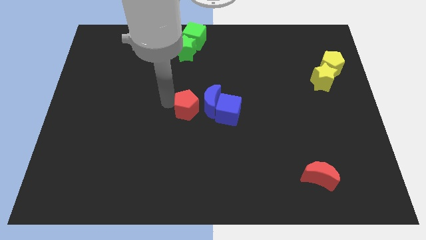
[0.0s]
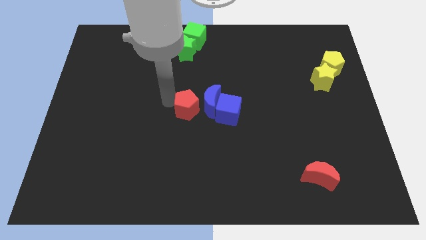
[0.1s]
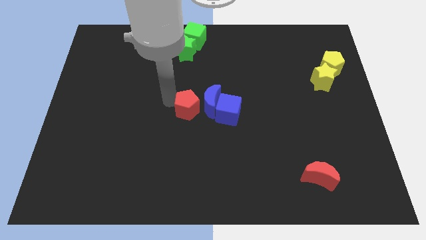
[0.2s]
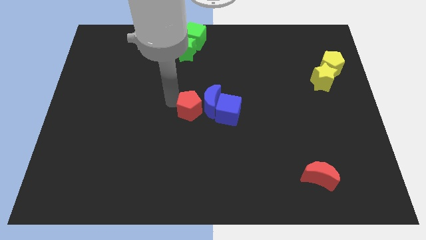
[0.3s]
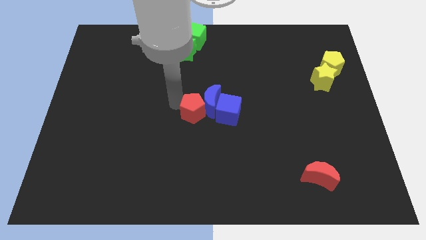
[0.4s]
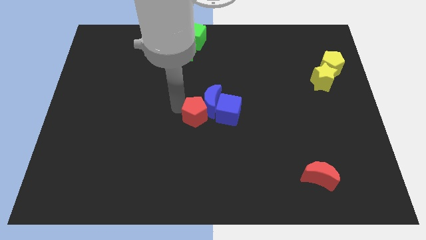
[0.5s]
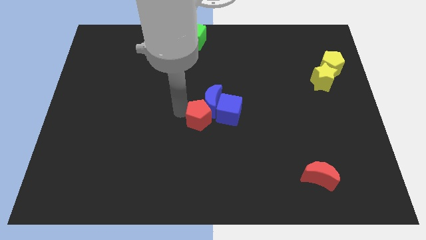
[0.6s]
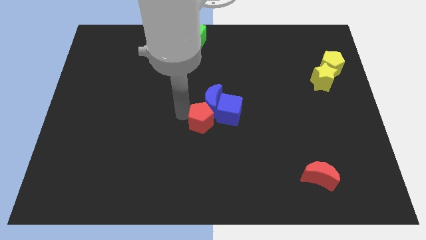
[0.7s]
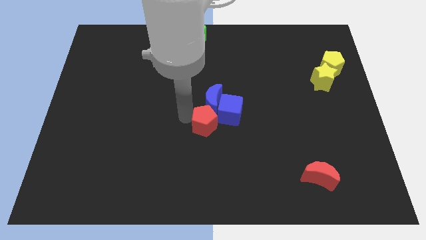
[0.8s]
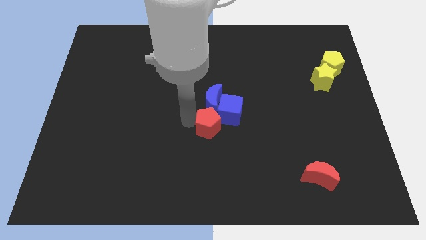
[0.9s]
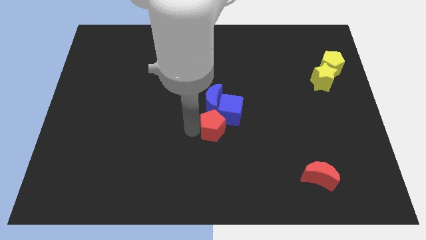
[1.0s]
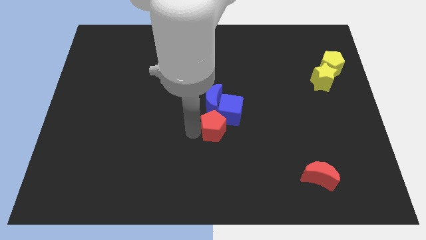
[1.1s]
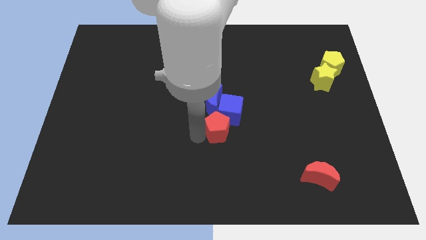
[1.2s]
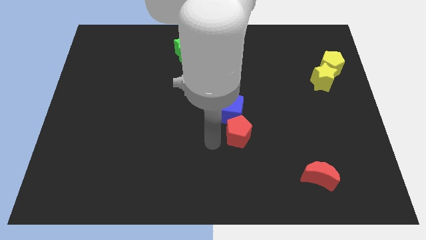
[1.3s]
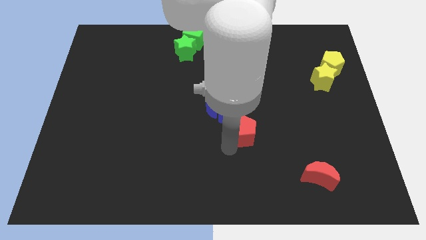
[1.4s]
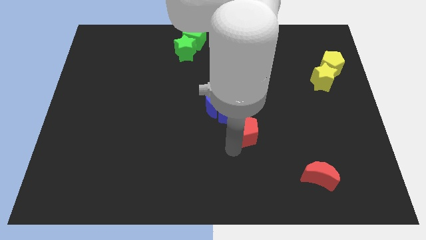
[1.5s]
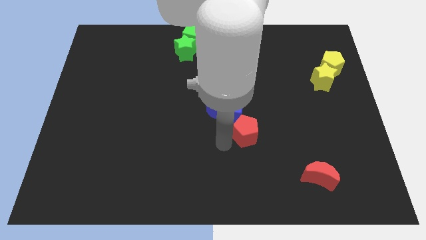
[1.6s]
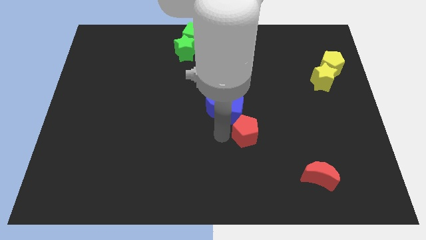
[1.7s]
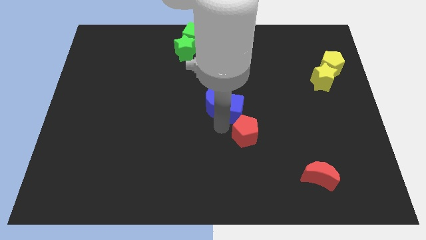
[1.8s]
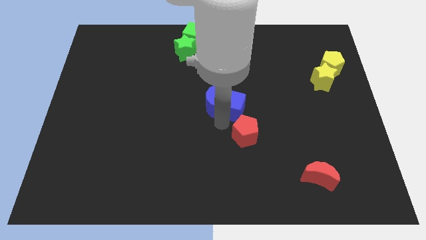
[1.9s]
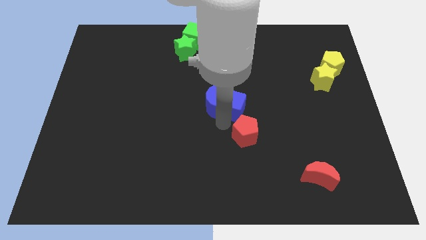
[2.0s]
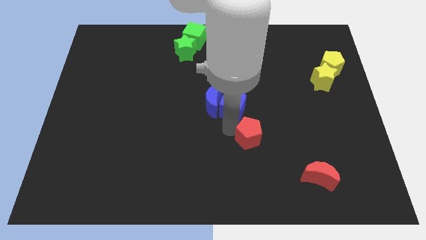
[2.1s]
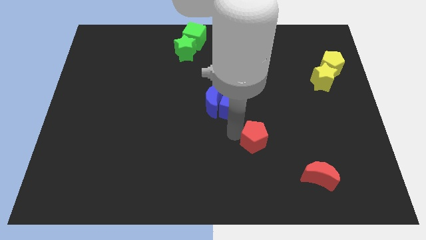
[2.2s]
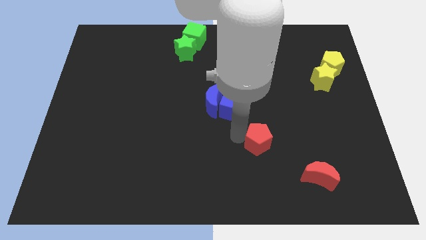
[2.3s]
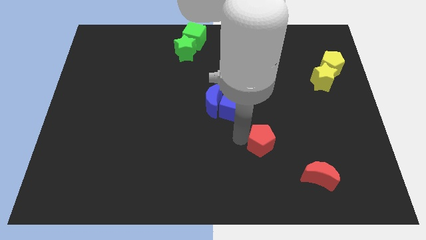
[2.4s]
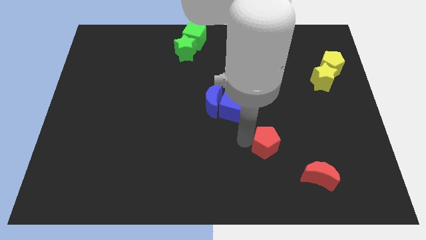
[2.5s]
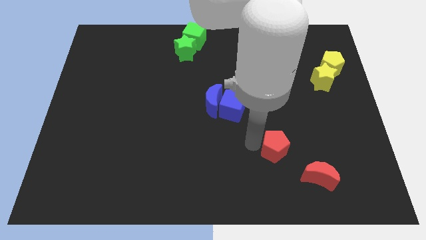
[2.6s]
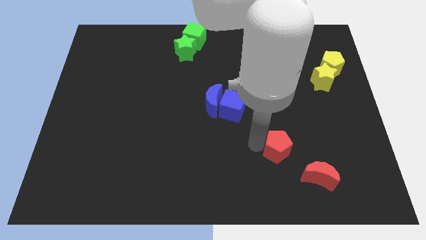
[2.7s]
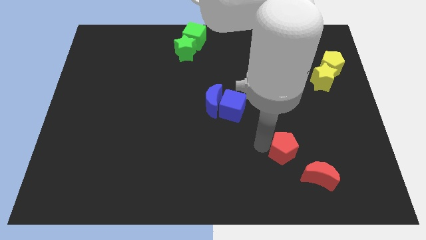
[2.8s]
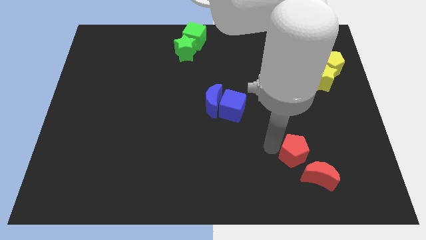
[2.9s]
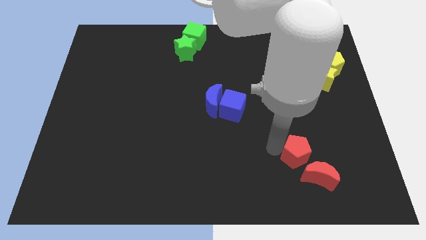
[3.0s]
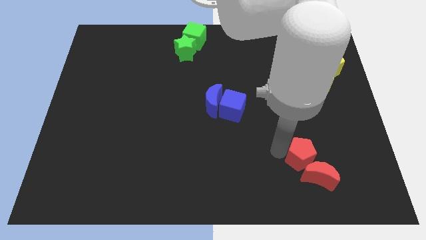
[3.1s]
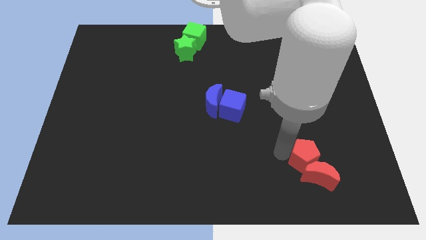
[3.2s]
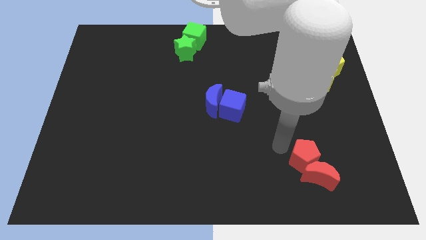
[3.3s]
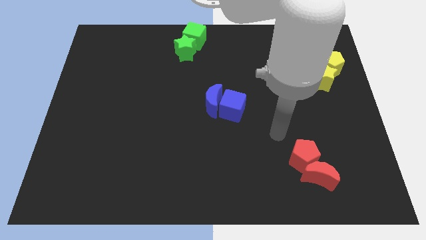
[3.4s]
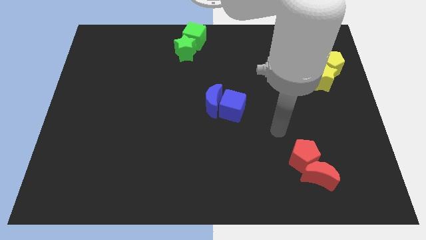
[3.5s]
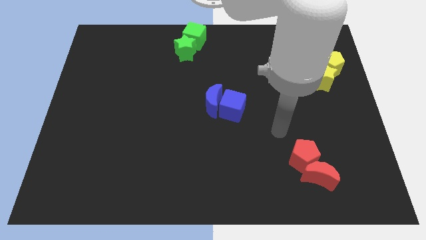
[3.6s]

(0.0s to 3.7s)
push the red pentagon to the top of the red crescent

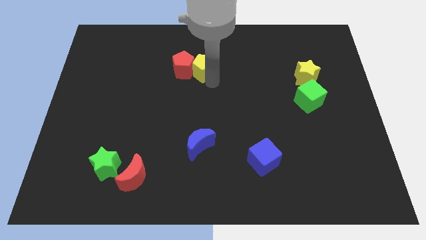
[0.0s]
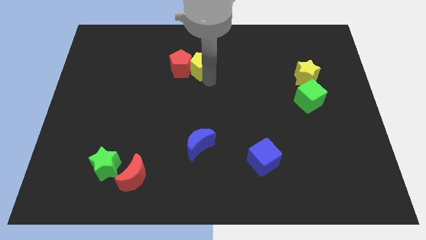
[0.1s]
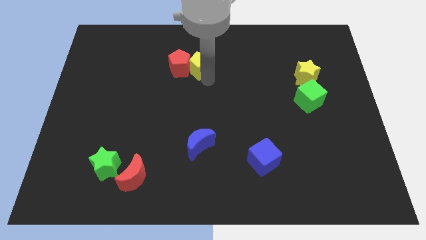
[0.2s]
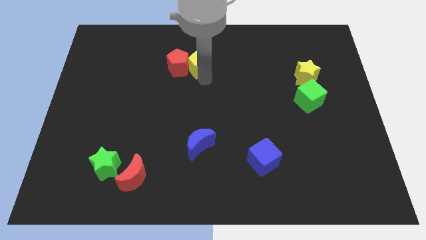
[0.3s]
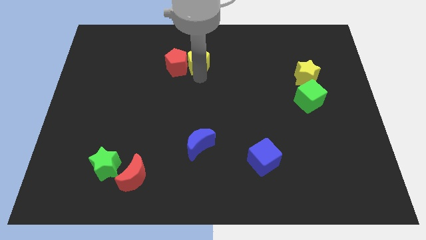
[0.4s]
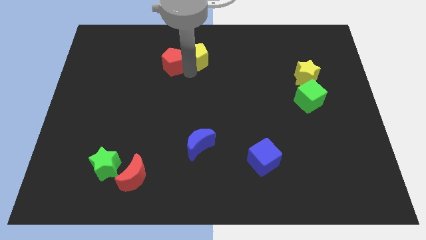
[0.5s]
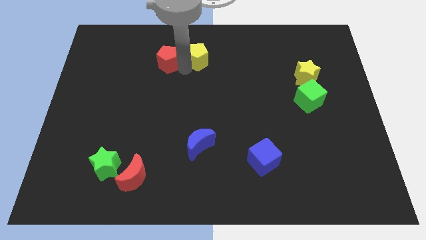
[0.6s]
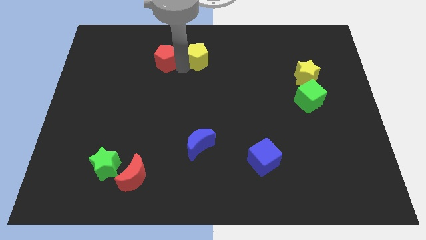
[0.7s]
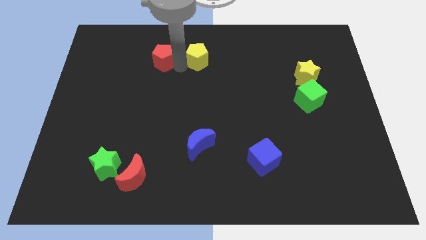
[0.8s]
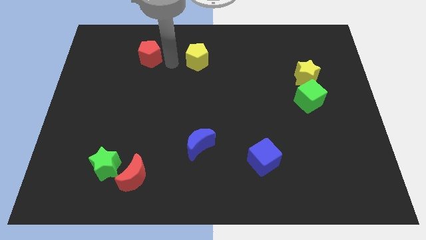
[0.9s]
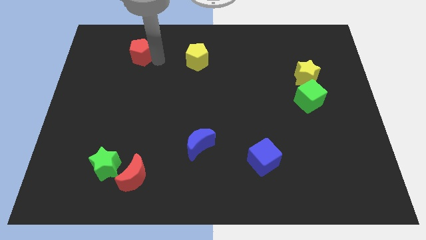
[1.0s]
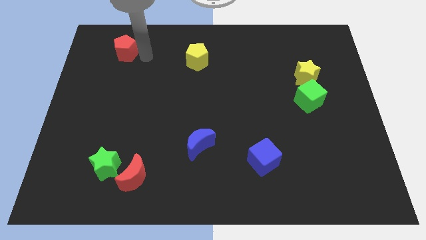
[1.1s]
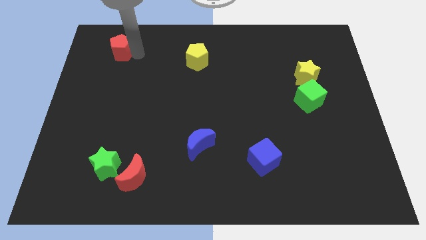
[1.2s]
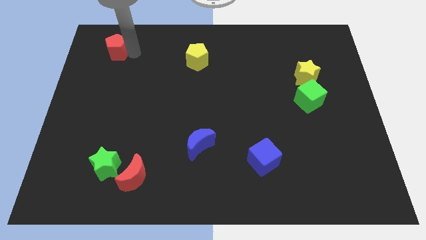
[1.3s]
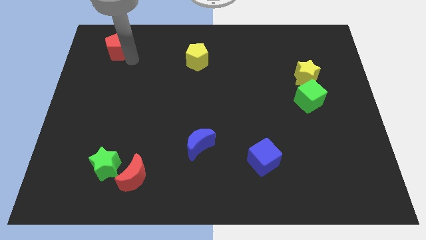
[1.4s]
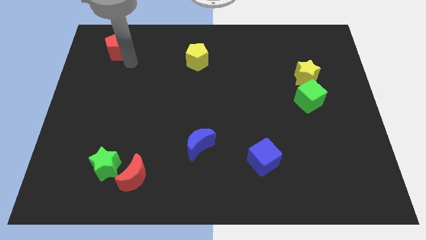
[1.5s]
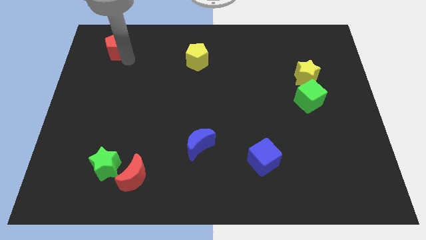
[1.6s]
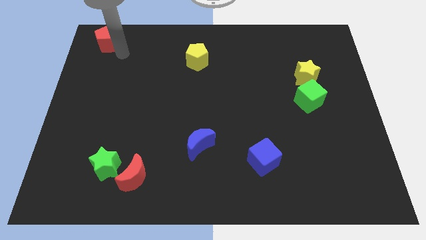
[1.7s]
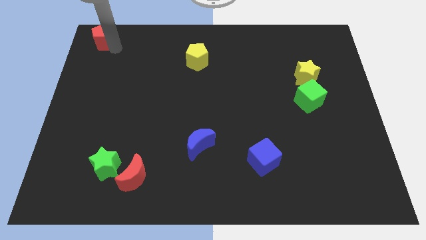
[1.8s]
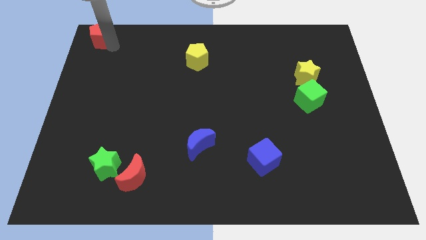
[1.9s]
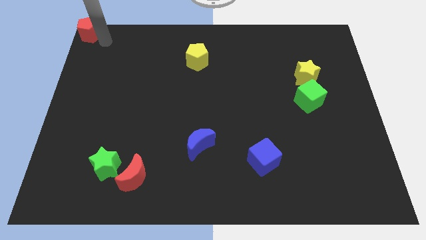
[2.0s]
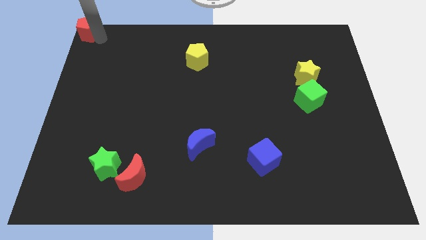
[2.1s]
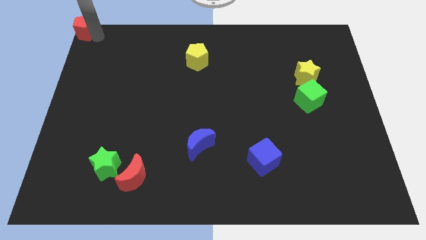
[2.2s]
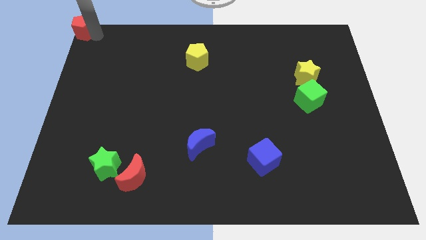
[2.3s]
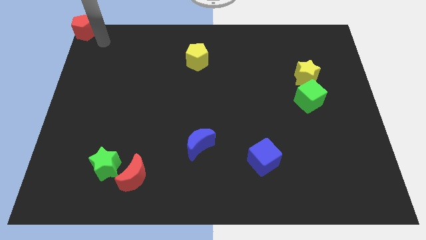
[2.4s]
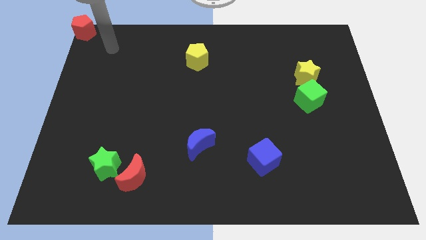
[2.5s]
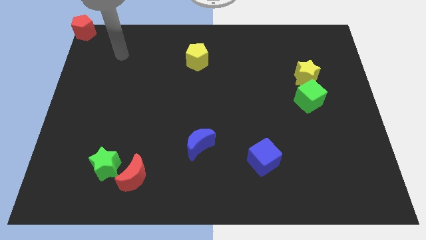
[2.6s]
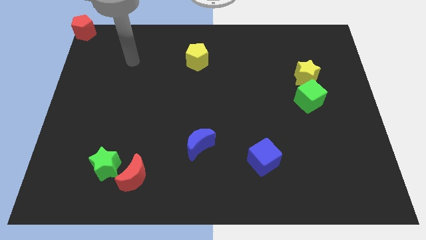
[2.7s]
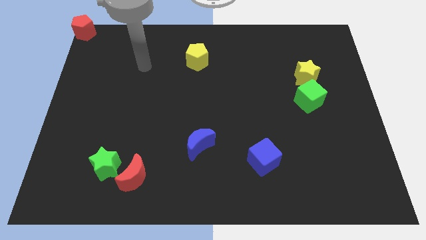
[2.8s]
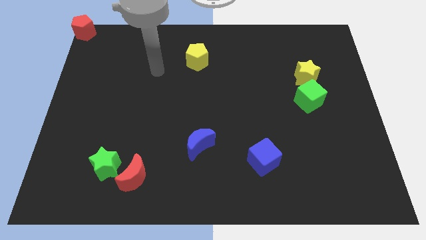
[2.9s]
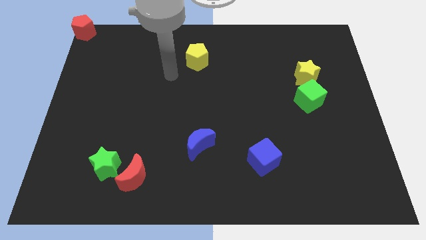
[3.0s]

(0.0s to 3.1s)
push the red pentagon away from the yellow pentagon

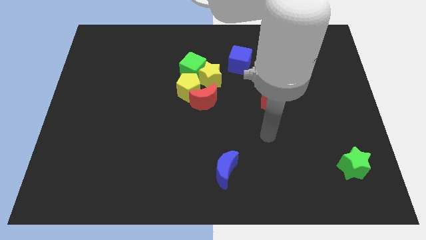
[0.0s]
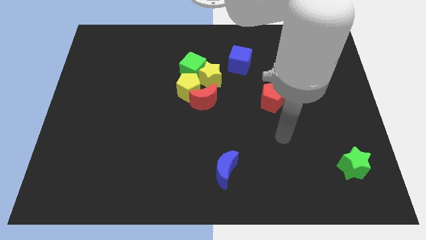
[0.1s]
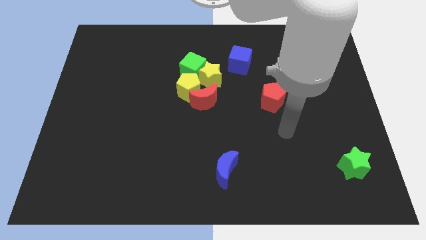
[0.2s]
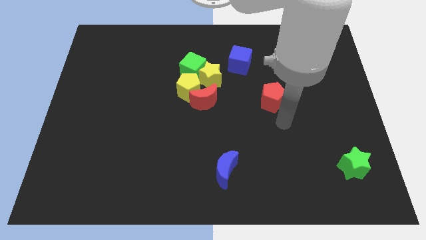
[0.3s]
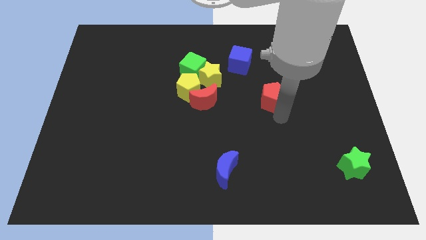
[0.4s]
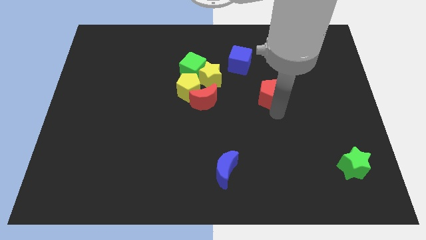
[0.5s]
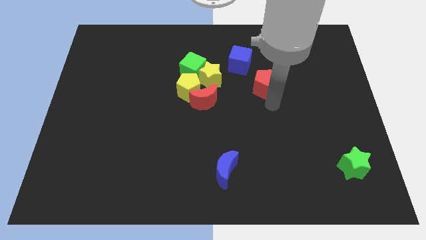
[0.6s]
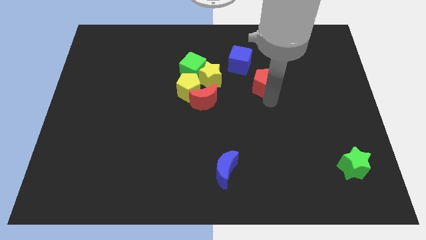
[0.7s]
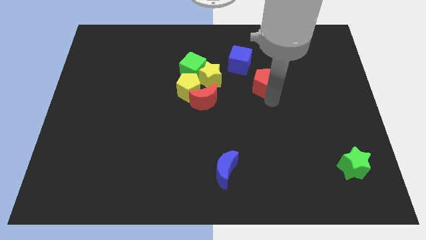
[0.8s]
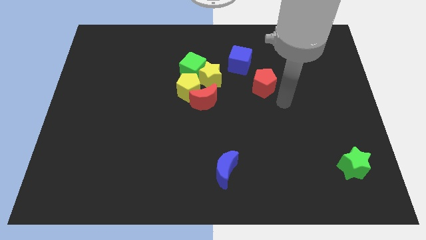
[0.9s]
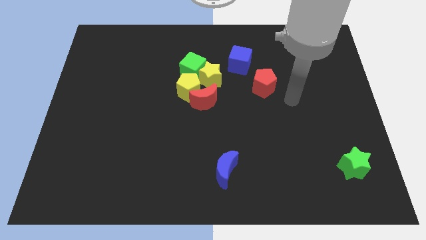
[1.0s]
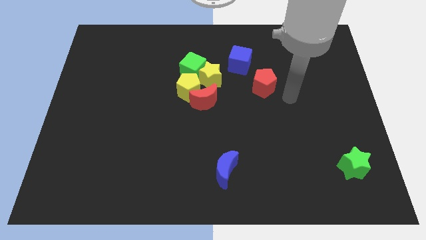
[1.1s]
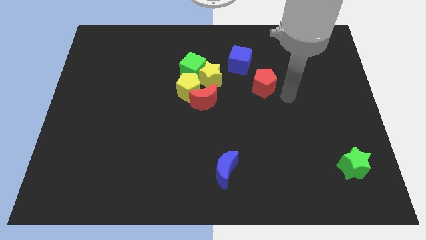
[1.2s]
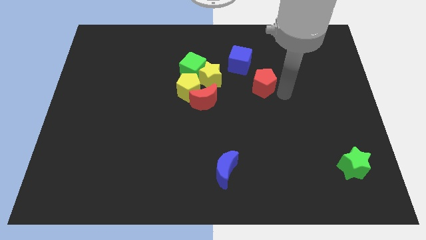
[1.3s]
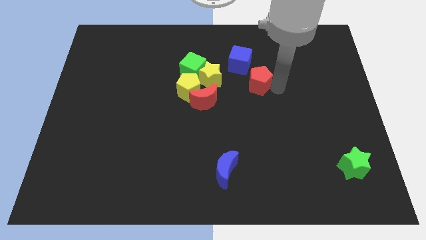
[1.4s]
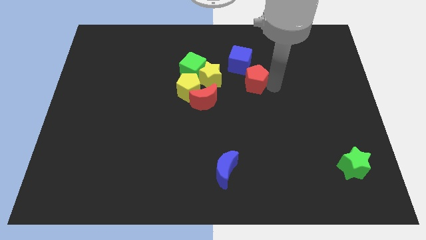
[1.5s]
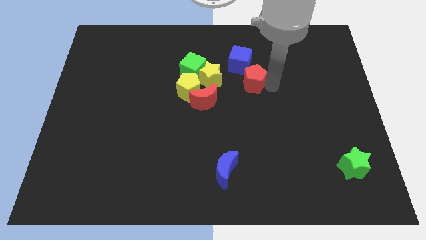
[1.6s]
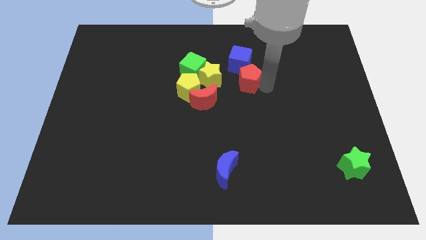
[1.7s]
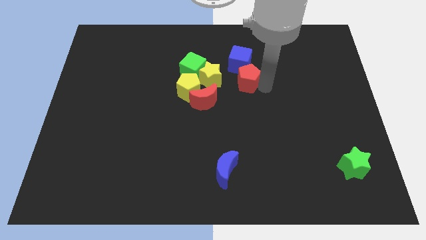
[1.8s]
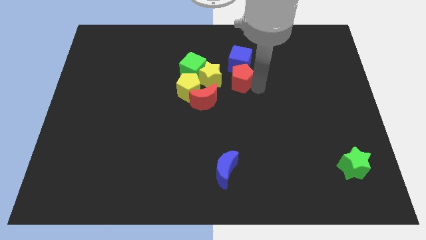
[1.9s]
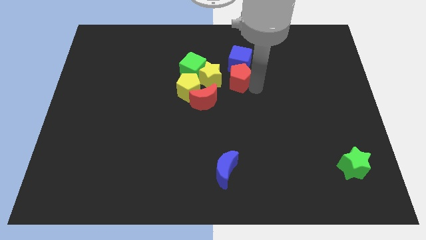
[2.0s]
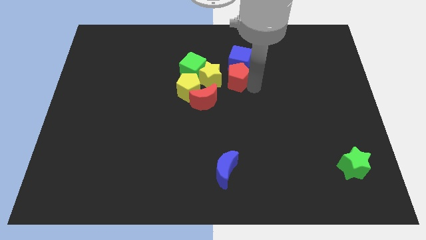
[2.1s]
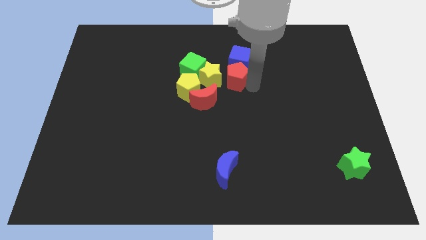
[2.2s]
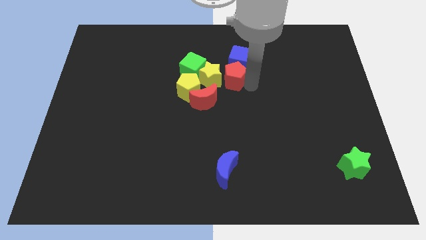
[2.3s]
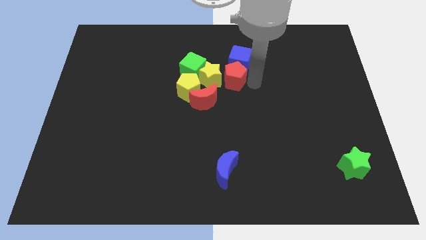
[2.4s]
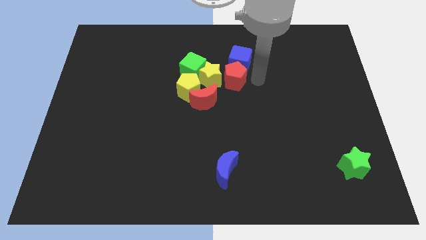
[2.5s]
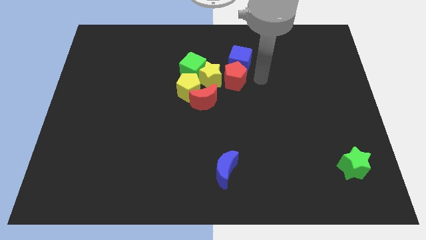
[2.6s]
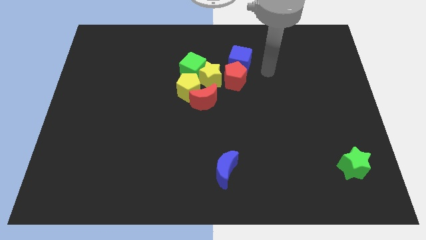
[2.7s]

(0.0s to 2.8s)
move the red pentagon close to the yellow star
